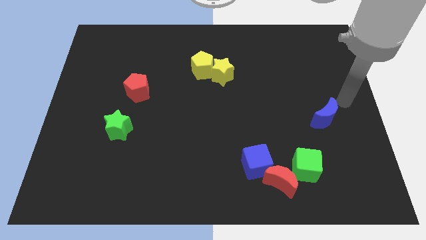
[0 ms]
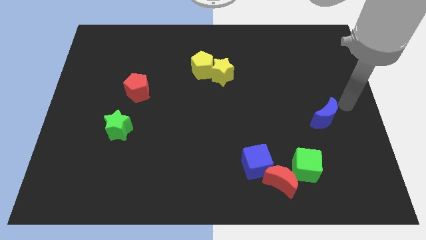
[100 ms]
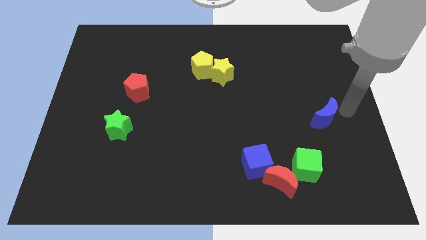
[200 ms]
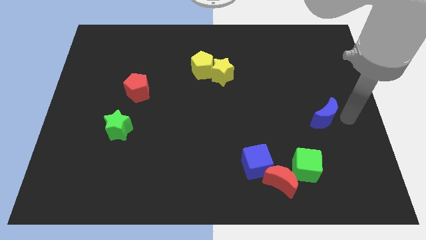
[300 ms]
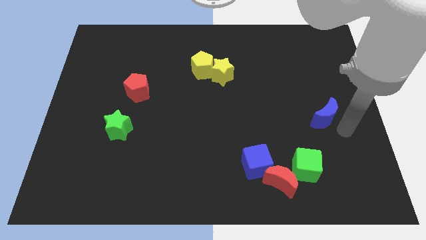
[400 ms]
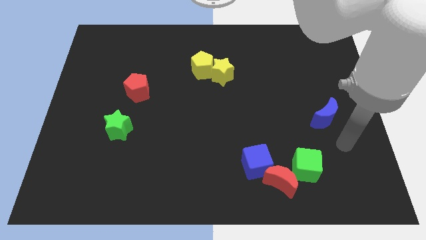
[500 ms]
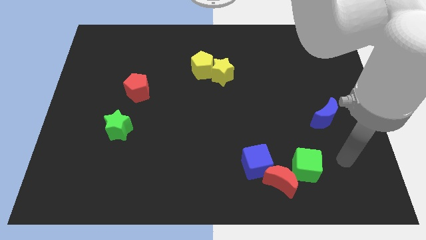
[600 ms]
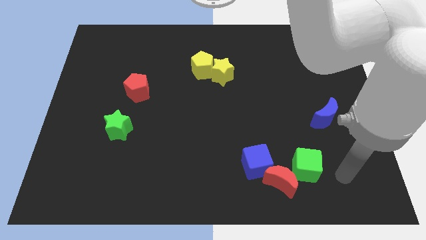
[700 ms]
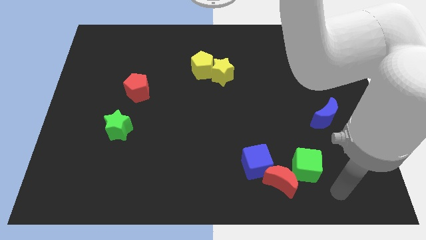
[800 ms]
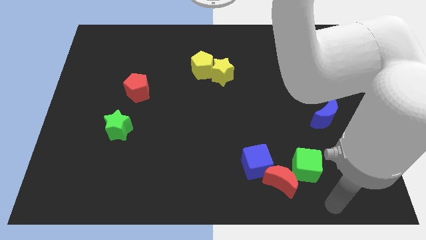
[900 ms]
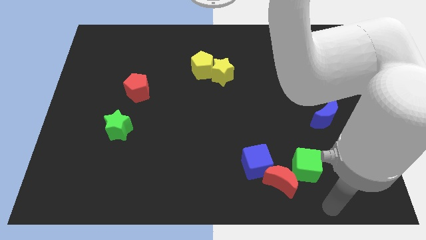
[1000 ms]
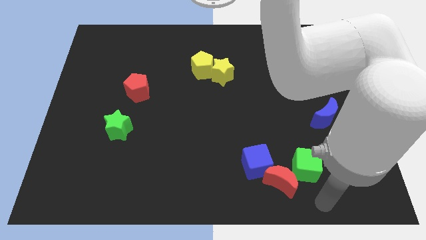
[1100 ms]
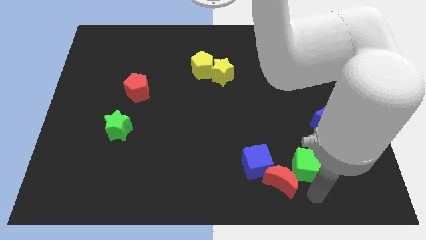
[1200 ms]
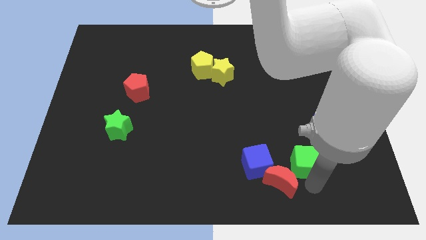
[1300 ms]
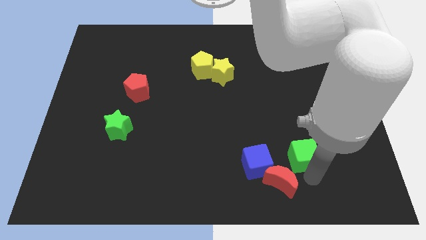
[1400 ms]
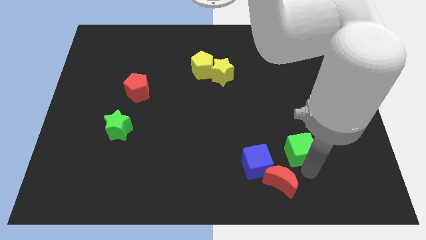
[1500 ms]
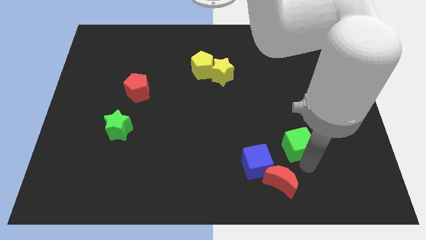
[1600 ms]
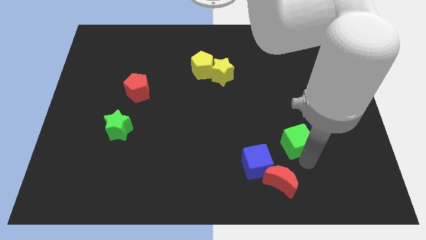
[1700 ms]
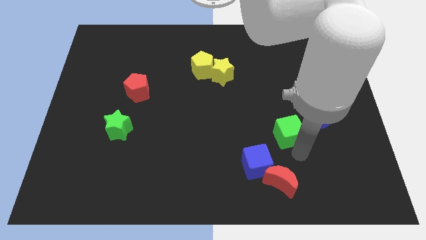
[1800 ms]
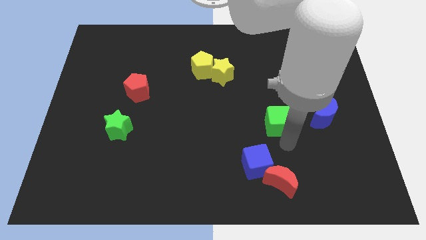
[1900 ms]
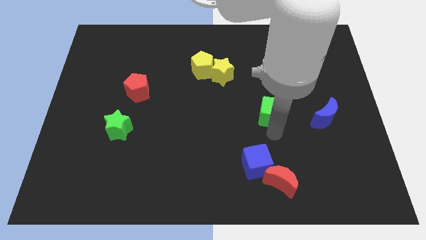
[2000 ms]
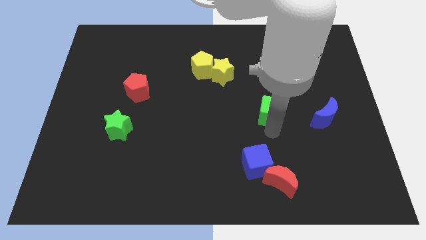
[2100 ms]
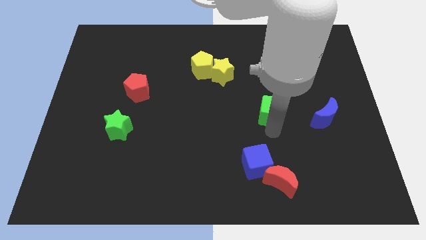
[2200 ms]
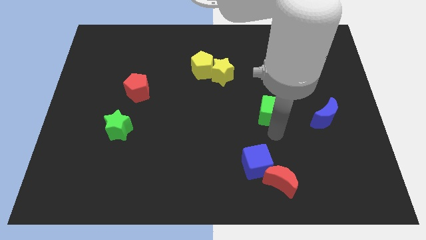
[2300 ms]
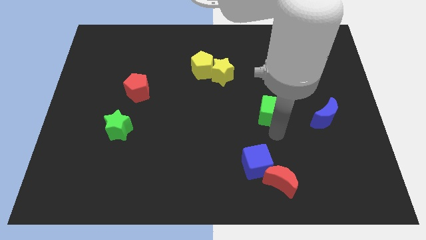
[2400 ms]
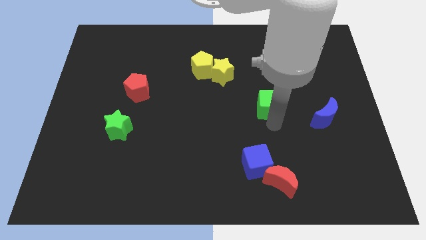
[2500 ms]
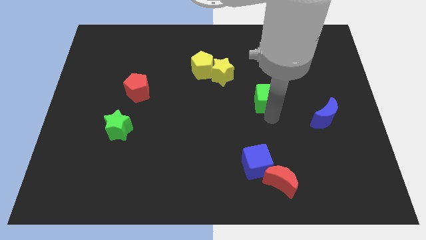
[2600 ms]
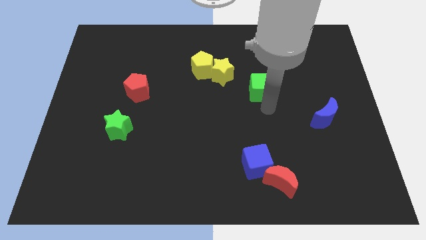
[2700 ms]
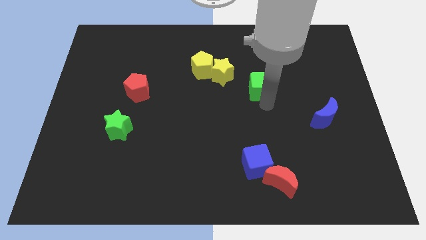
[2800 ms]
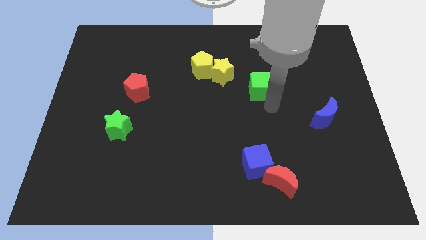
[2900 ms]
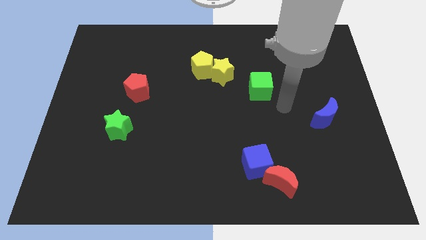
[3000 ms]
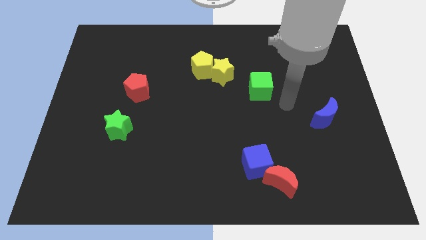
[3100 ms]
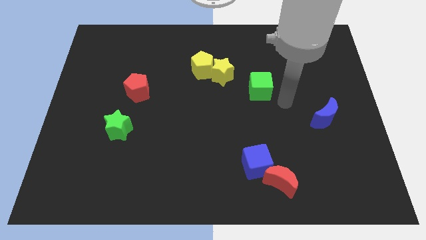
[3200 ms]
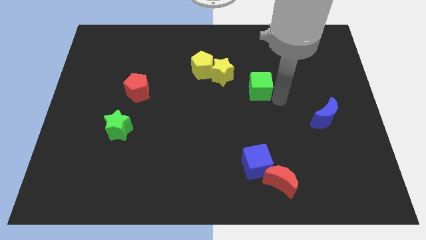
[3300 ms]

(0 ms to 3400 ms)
push the green cube towards the top side of the board

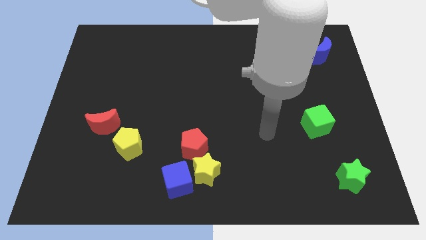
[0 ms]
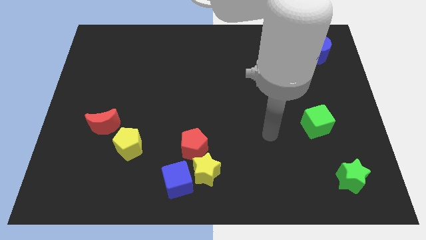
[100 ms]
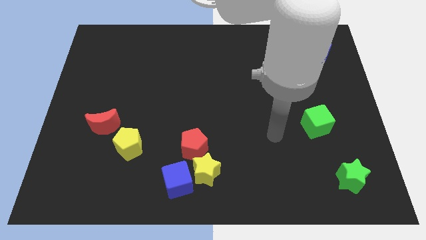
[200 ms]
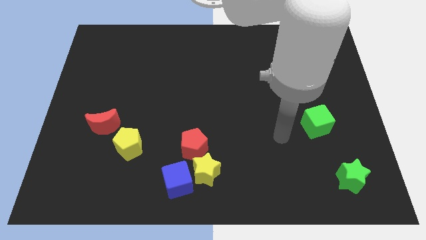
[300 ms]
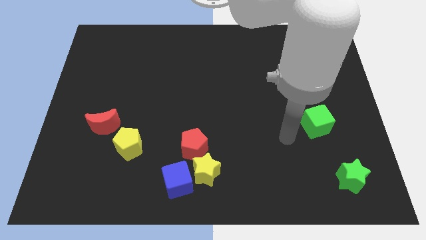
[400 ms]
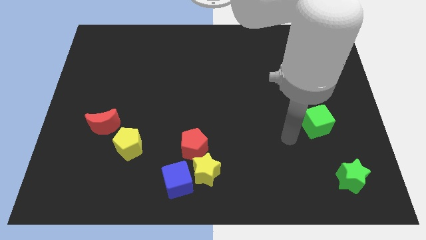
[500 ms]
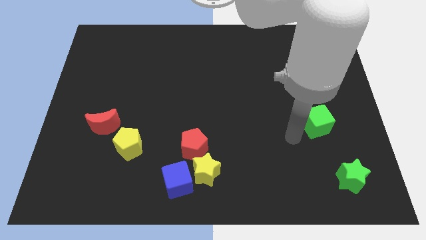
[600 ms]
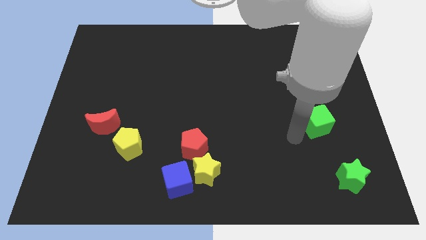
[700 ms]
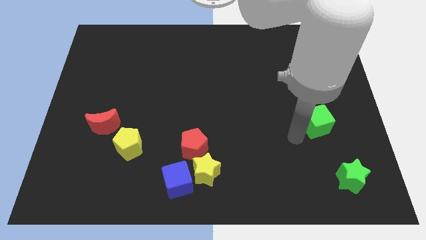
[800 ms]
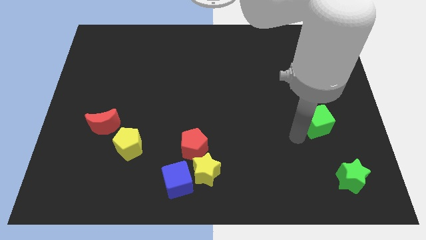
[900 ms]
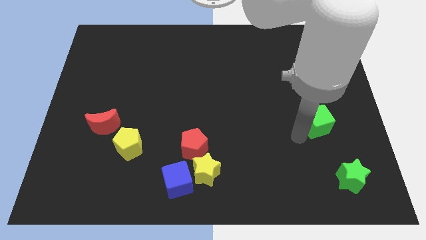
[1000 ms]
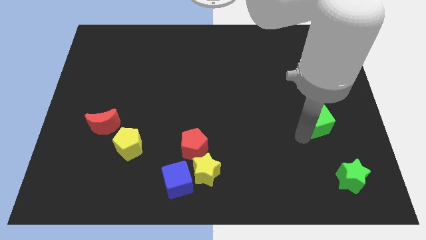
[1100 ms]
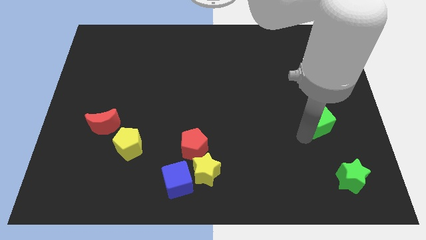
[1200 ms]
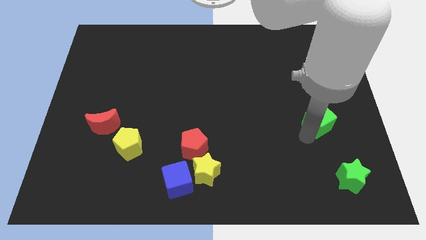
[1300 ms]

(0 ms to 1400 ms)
move the green cube to the right center of the board

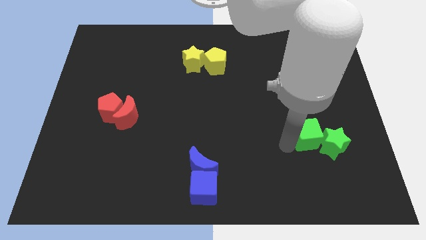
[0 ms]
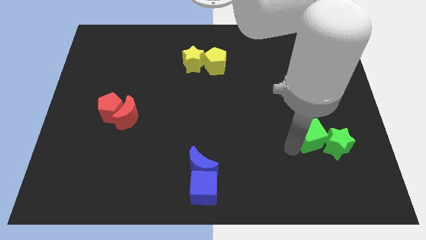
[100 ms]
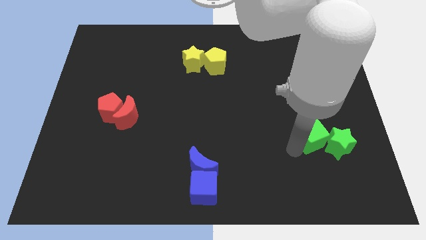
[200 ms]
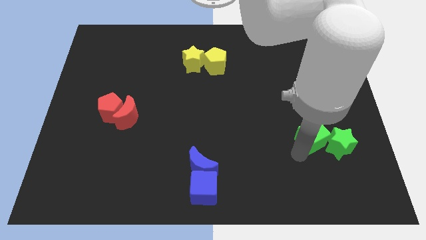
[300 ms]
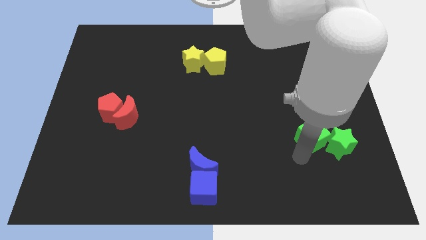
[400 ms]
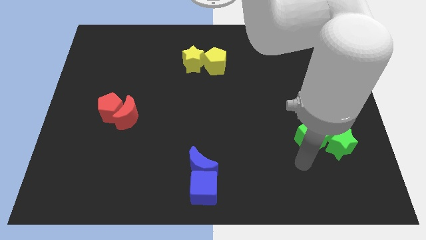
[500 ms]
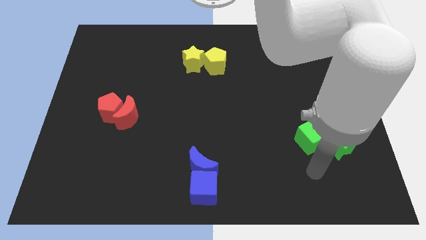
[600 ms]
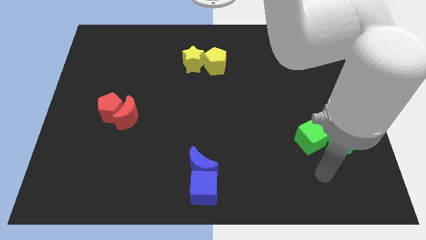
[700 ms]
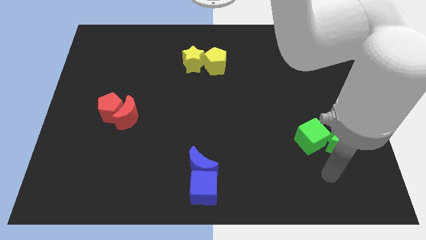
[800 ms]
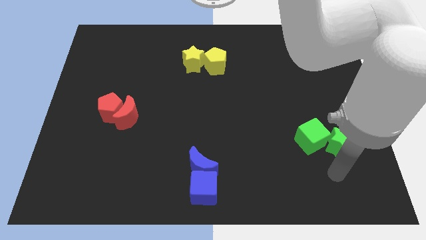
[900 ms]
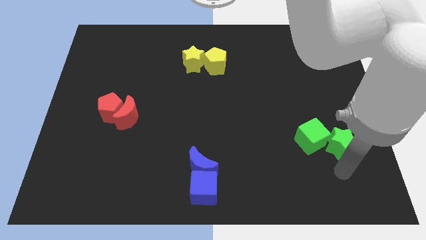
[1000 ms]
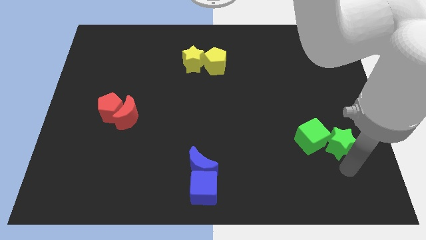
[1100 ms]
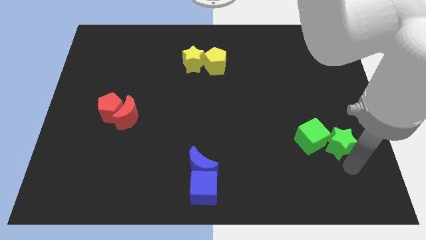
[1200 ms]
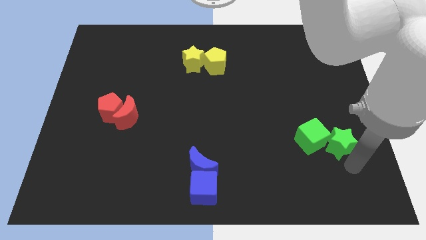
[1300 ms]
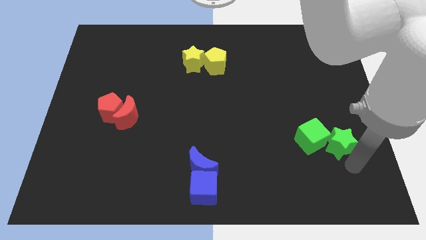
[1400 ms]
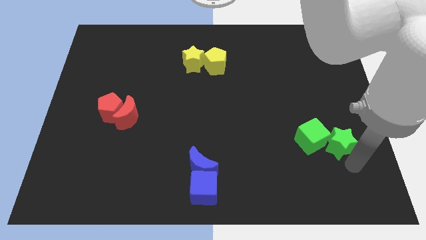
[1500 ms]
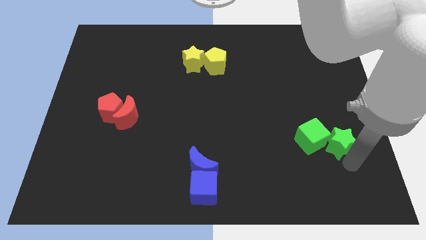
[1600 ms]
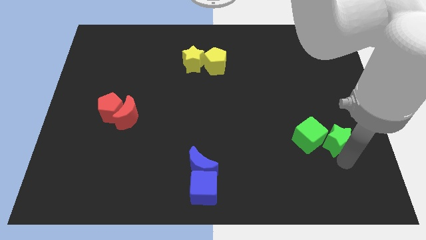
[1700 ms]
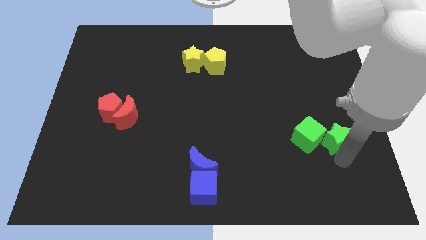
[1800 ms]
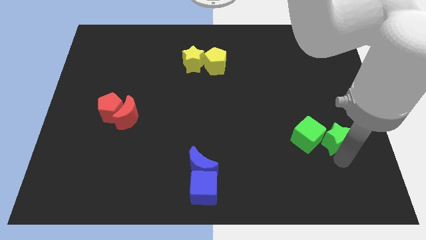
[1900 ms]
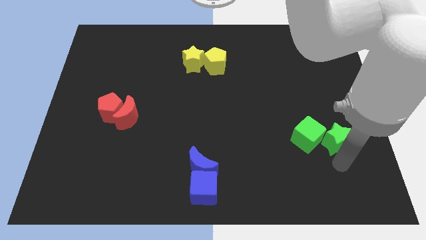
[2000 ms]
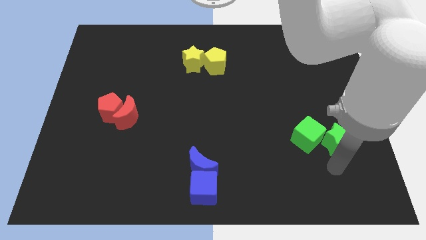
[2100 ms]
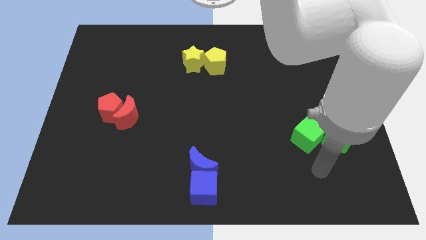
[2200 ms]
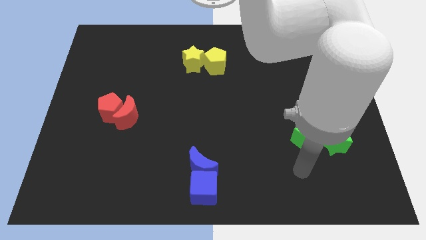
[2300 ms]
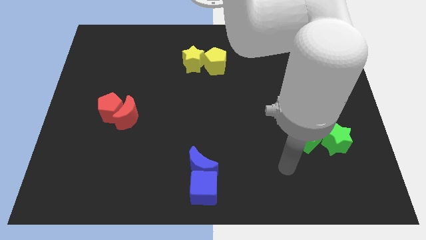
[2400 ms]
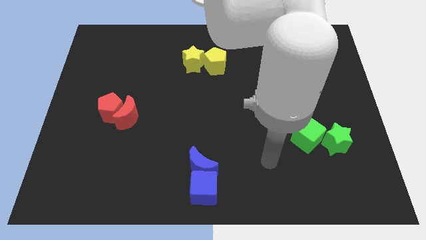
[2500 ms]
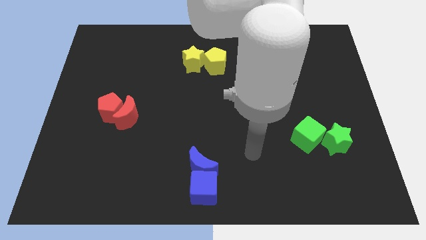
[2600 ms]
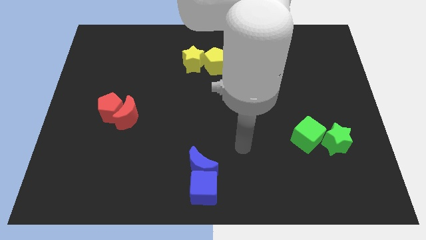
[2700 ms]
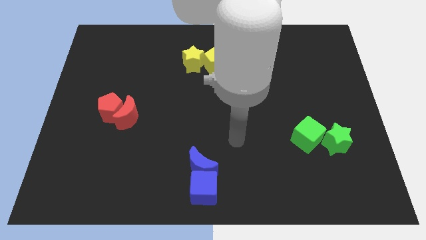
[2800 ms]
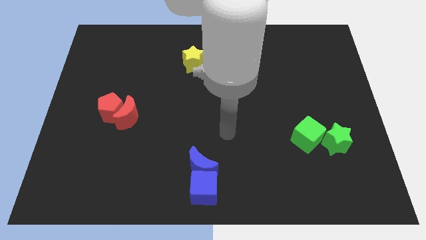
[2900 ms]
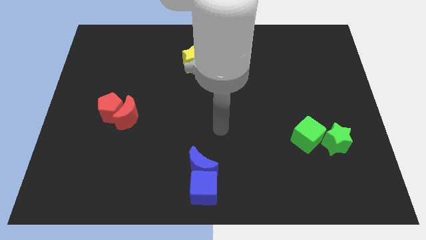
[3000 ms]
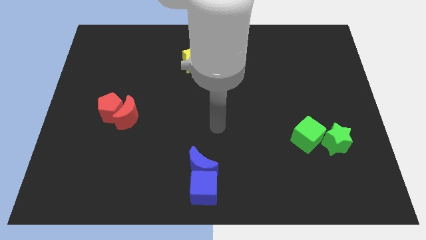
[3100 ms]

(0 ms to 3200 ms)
slightly push the green star into the green cube

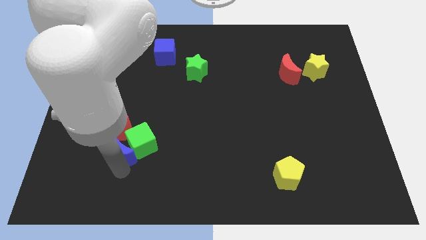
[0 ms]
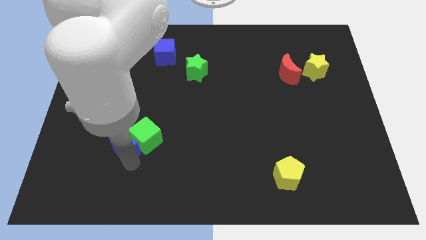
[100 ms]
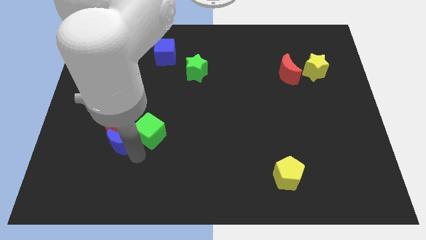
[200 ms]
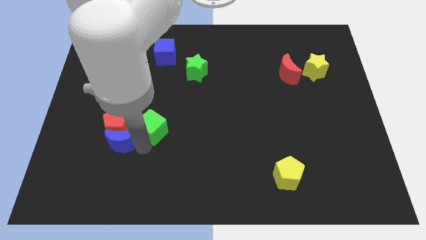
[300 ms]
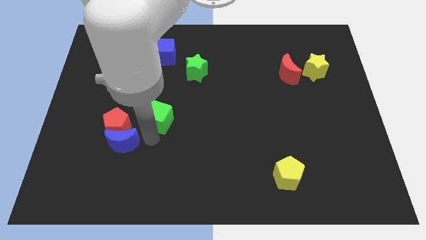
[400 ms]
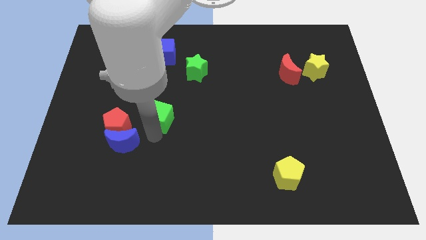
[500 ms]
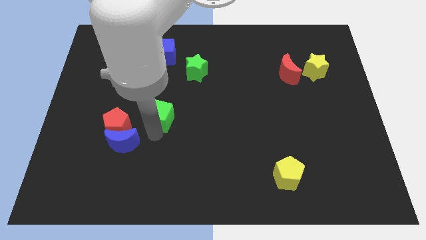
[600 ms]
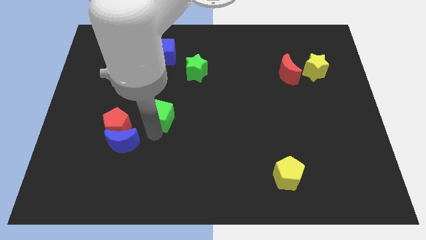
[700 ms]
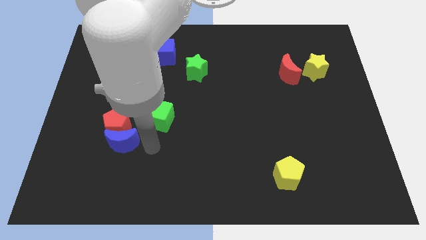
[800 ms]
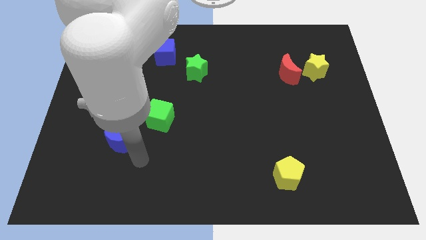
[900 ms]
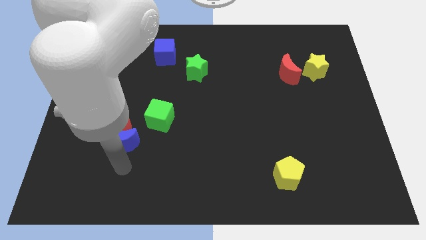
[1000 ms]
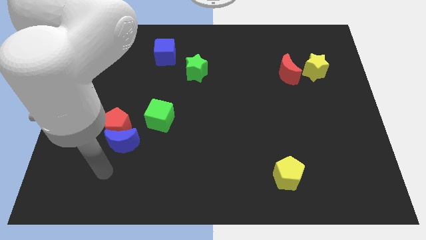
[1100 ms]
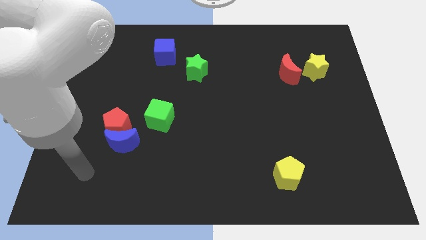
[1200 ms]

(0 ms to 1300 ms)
separate the blue crescent and green cube
